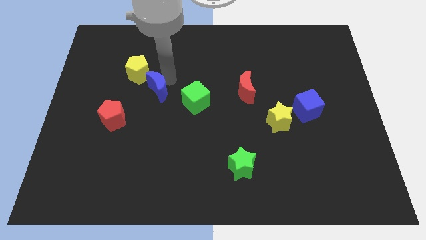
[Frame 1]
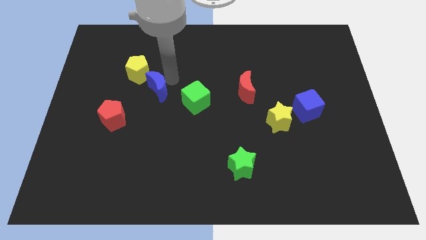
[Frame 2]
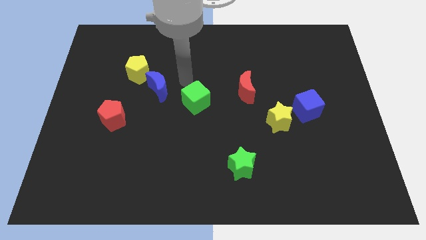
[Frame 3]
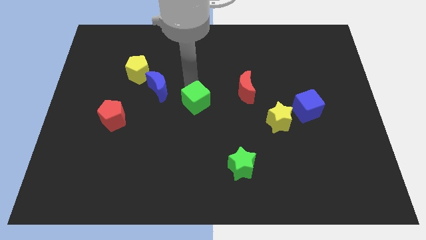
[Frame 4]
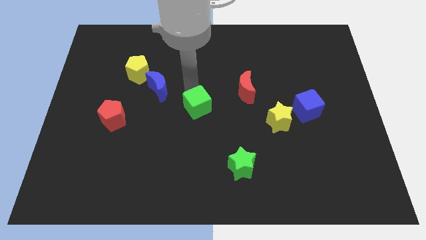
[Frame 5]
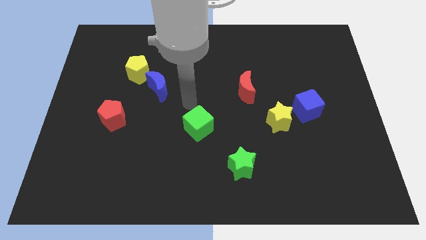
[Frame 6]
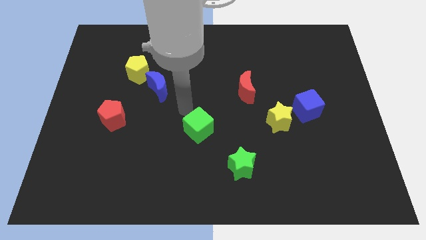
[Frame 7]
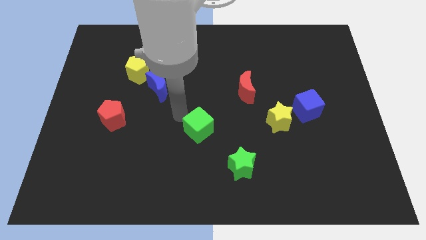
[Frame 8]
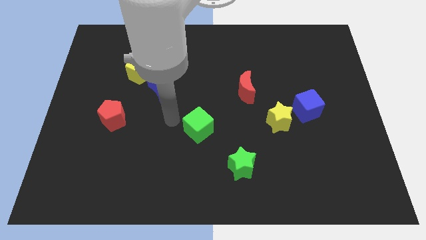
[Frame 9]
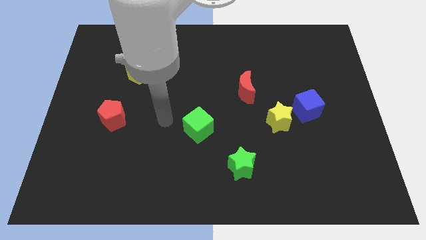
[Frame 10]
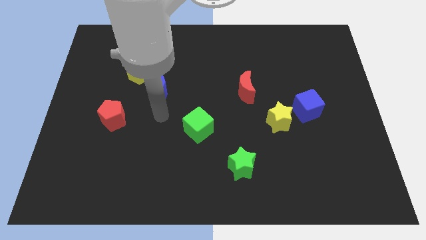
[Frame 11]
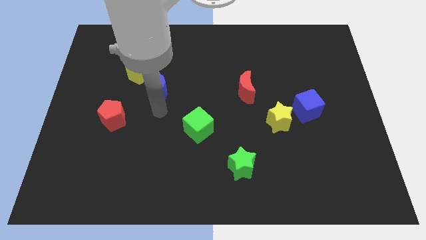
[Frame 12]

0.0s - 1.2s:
place the green cube diagonal to the red crescent

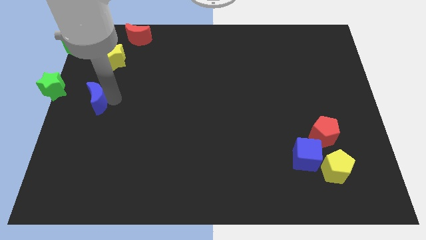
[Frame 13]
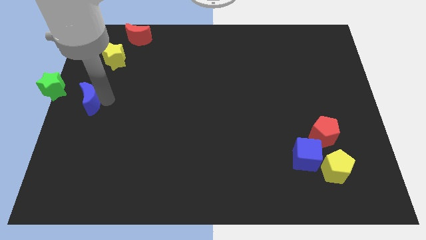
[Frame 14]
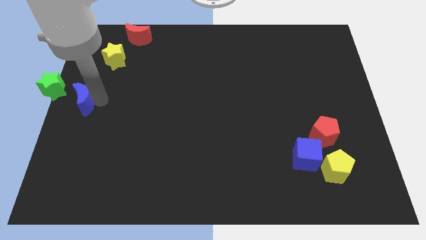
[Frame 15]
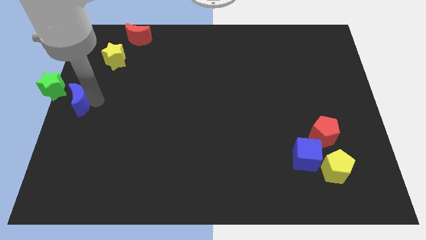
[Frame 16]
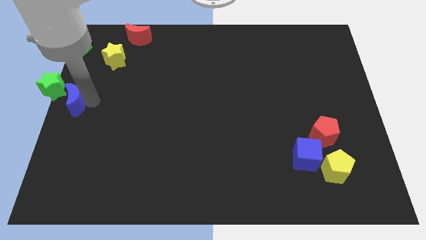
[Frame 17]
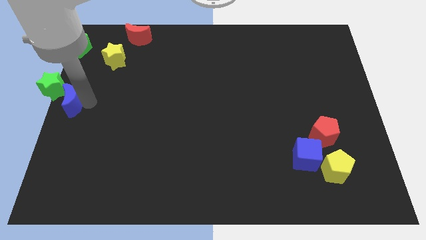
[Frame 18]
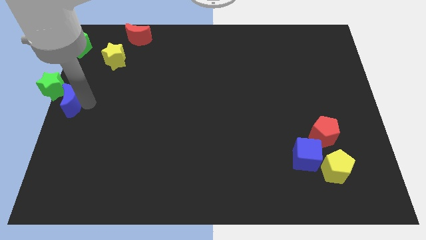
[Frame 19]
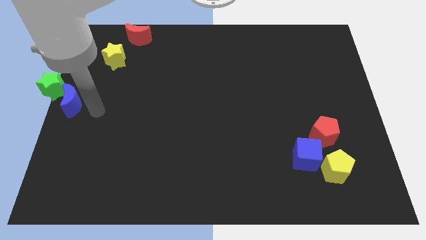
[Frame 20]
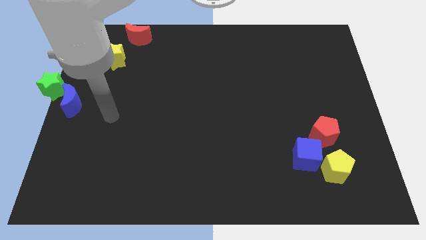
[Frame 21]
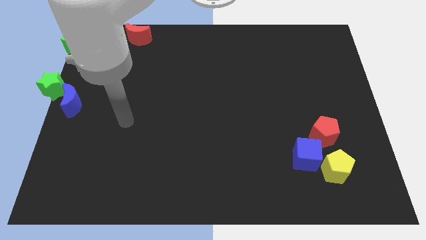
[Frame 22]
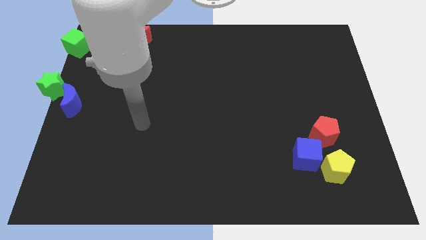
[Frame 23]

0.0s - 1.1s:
push blue moon into green star

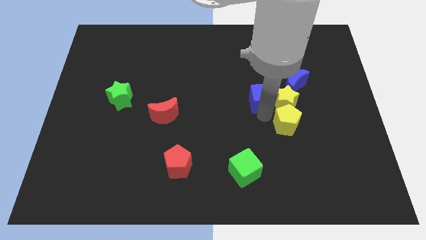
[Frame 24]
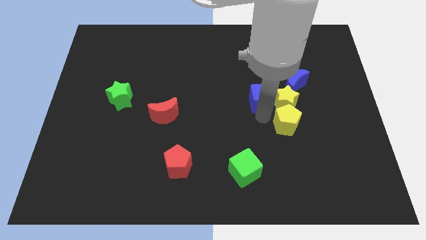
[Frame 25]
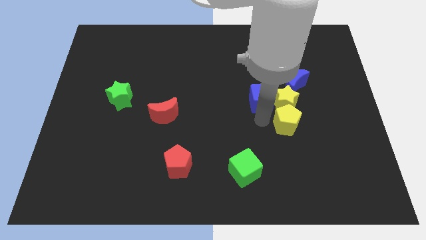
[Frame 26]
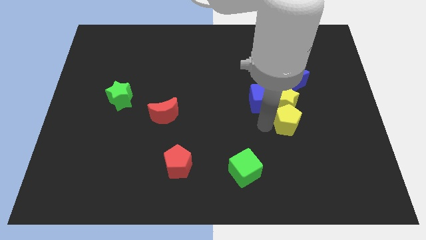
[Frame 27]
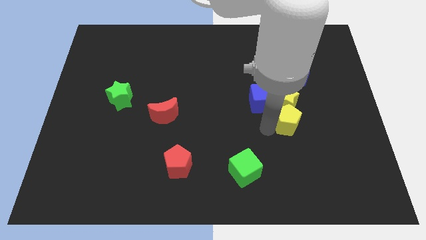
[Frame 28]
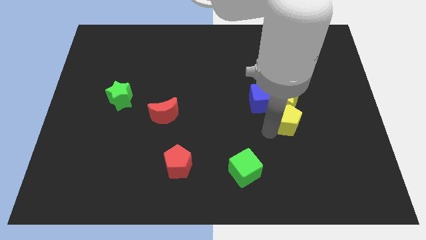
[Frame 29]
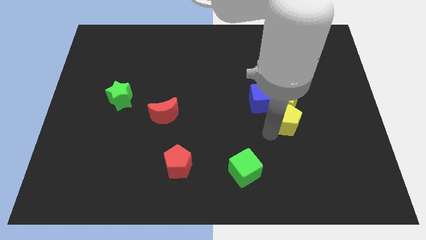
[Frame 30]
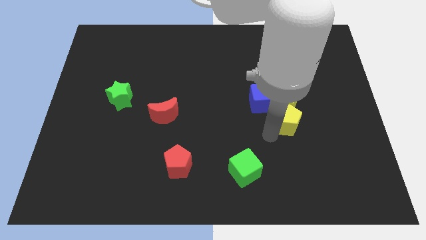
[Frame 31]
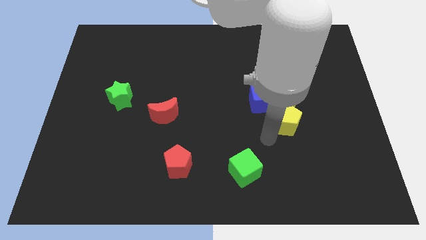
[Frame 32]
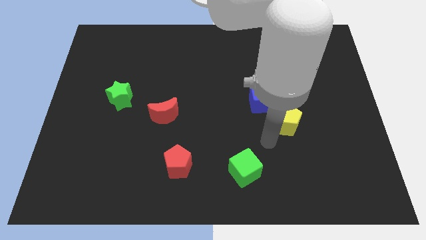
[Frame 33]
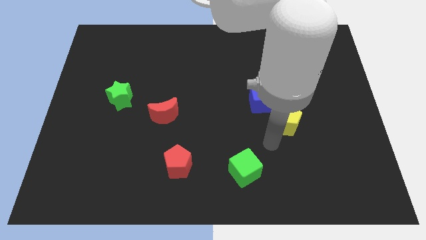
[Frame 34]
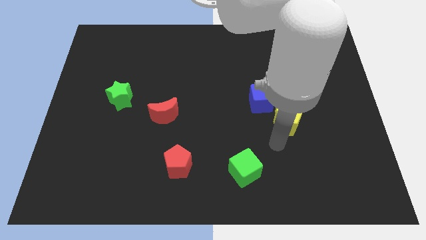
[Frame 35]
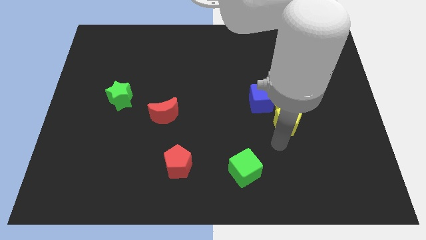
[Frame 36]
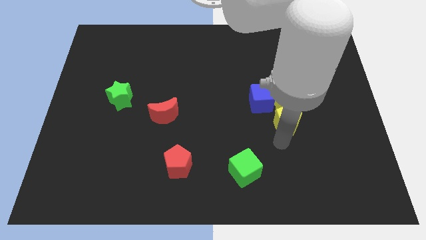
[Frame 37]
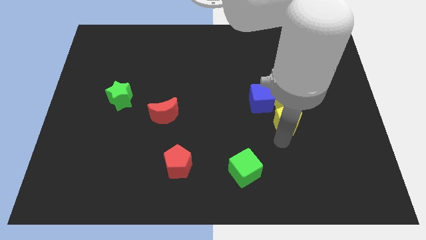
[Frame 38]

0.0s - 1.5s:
move the arm towards the bottom side of the yellow pentagon

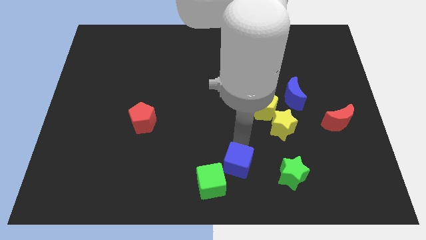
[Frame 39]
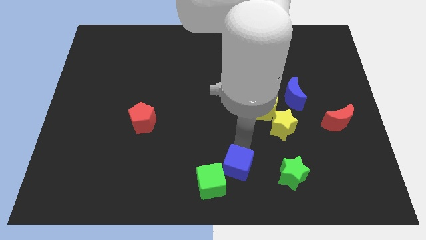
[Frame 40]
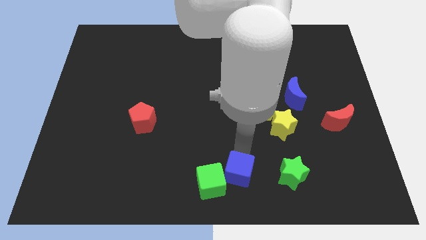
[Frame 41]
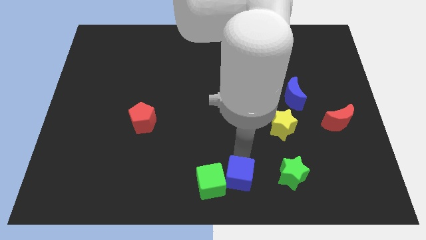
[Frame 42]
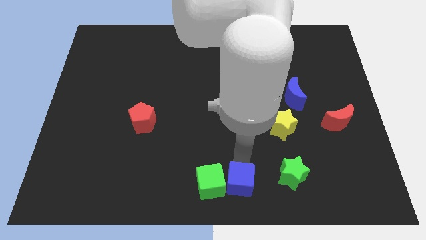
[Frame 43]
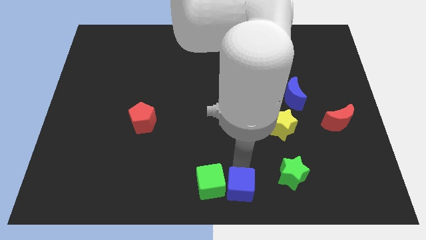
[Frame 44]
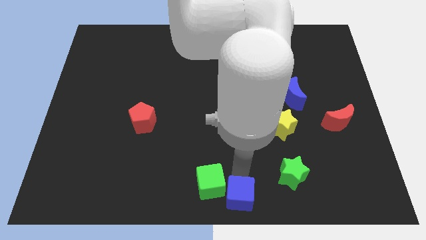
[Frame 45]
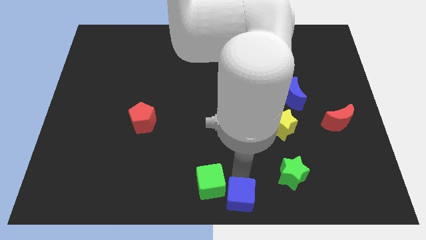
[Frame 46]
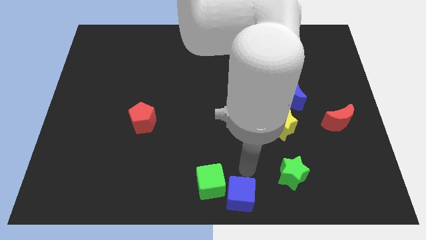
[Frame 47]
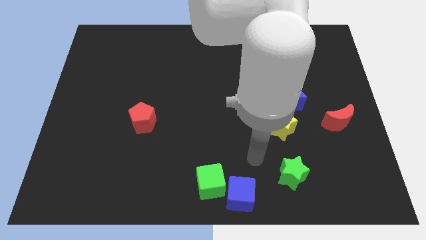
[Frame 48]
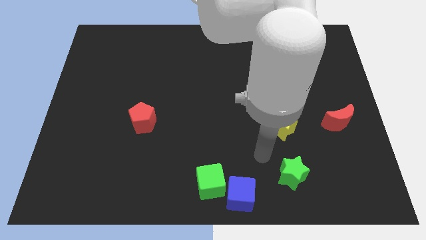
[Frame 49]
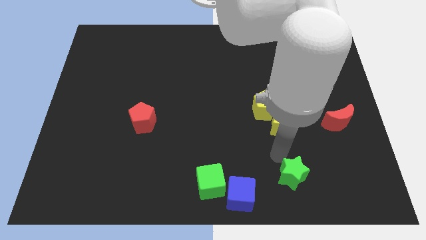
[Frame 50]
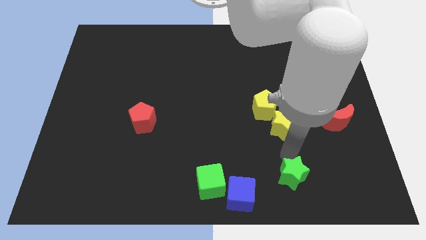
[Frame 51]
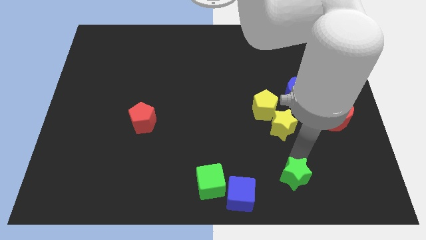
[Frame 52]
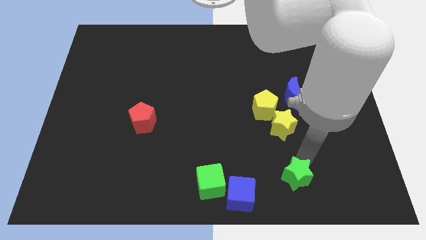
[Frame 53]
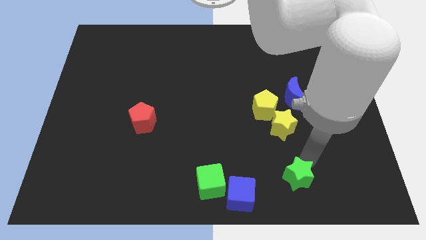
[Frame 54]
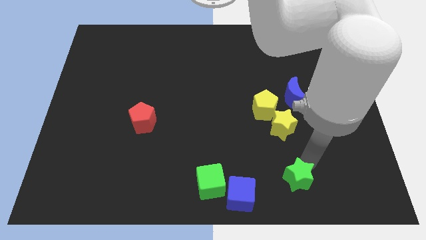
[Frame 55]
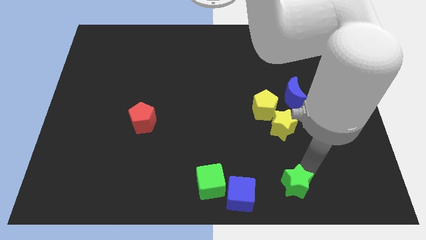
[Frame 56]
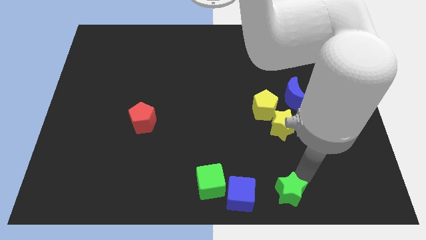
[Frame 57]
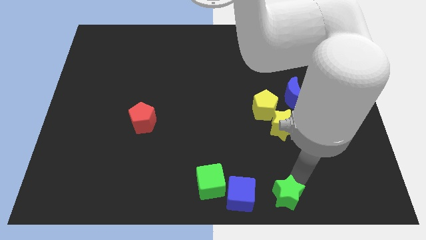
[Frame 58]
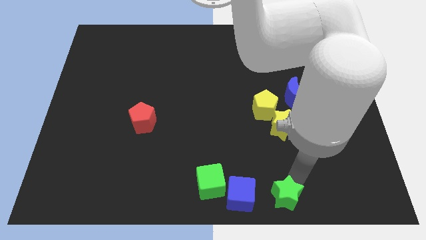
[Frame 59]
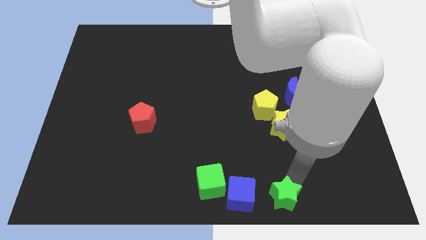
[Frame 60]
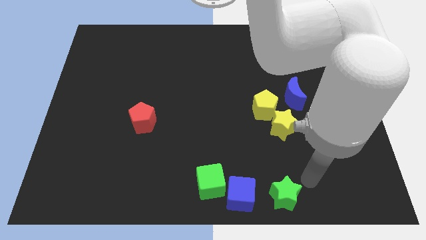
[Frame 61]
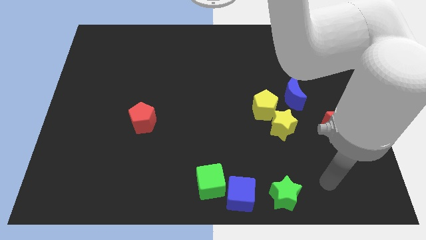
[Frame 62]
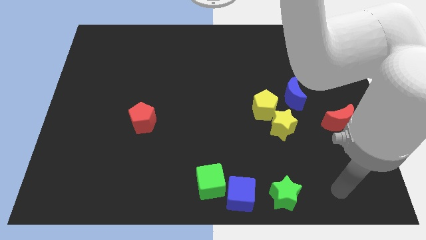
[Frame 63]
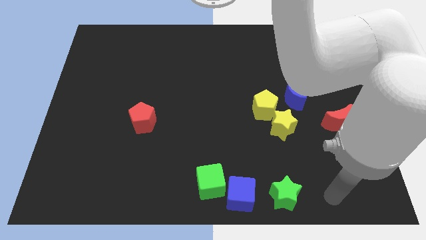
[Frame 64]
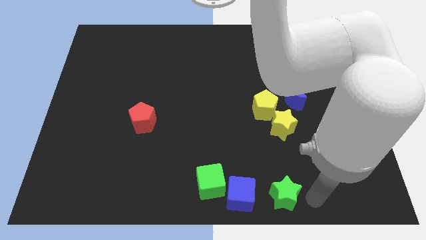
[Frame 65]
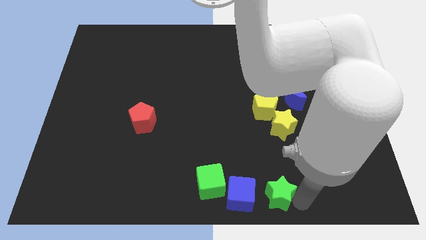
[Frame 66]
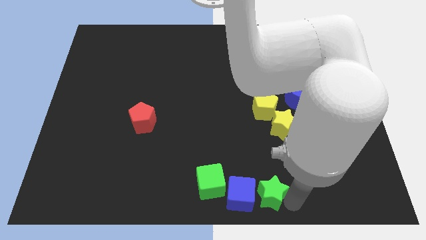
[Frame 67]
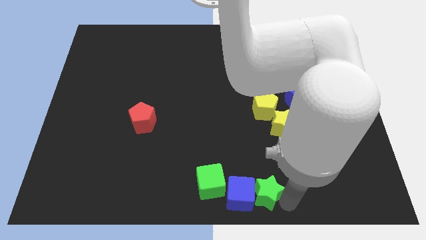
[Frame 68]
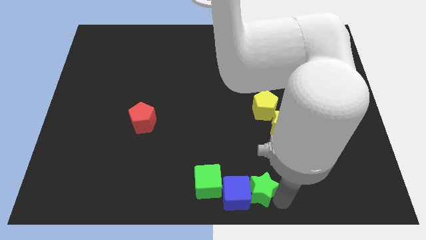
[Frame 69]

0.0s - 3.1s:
move the green star to the right side of the blue cube

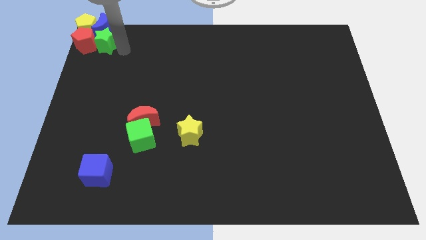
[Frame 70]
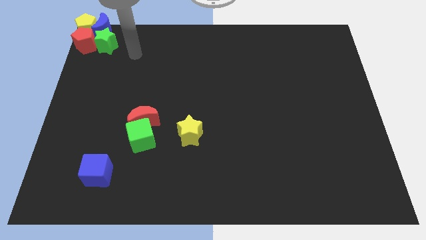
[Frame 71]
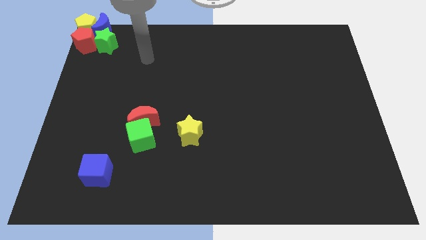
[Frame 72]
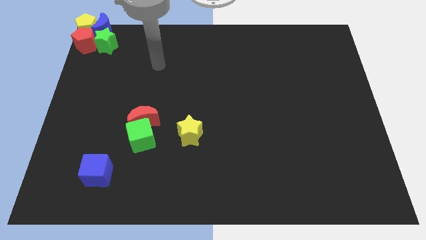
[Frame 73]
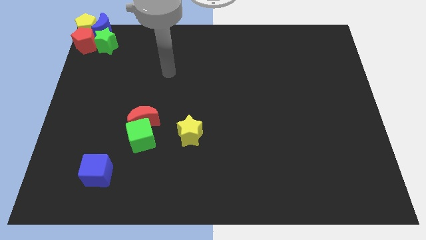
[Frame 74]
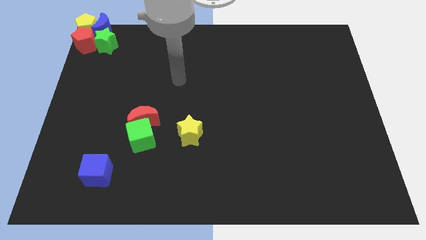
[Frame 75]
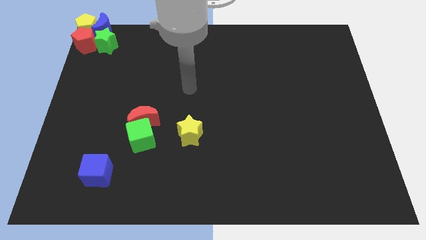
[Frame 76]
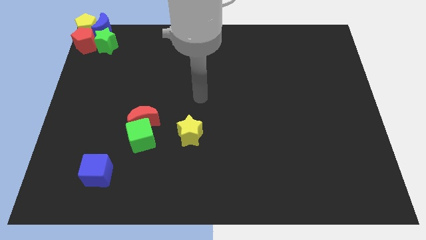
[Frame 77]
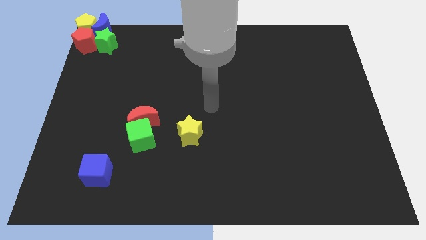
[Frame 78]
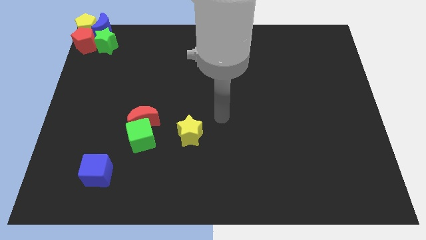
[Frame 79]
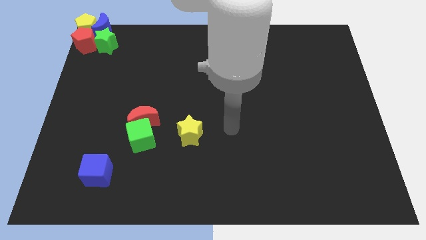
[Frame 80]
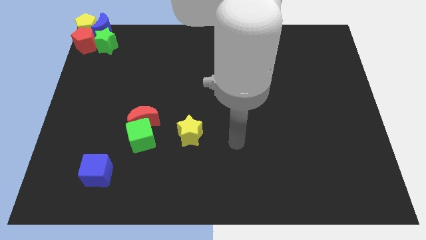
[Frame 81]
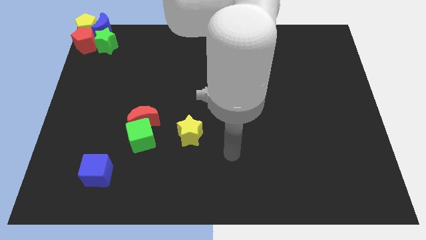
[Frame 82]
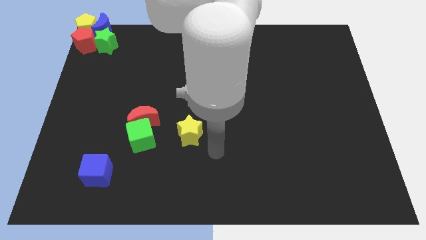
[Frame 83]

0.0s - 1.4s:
place your arm at the bottom right side of yellow star

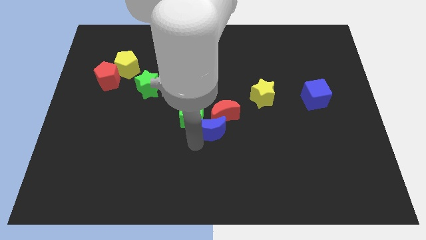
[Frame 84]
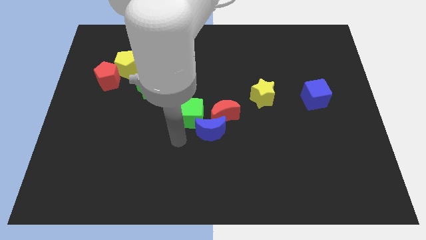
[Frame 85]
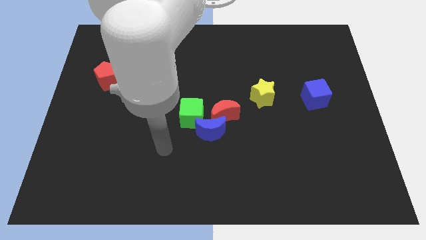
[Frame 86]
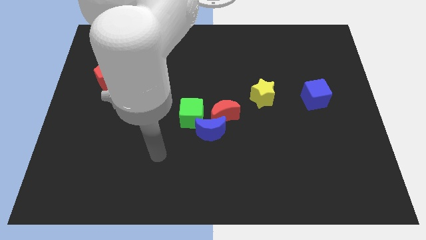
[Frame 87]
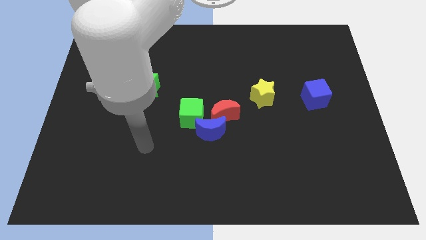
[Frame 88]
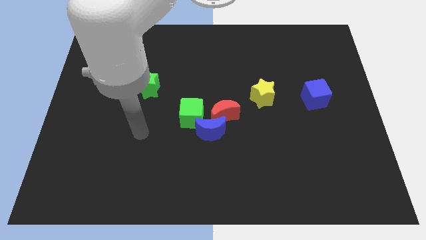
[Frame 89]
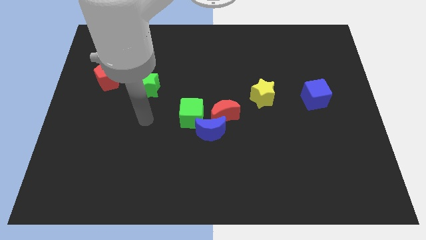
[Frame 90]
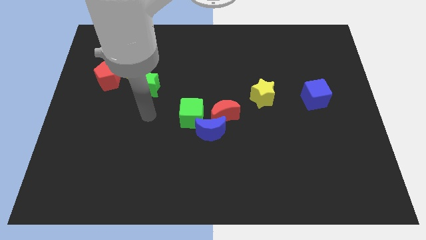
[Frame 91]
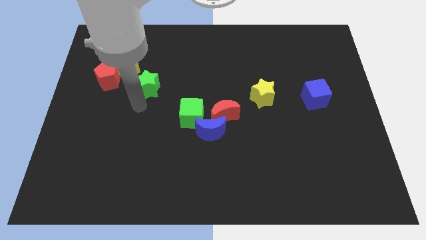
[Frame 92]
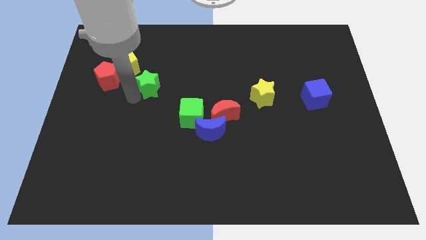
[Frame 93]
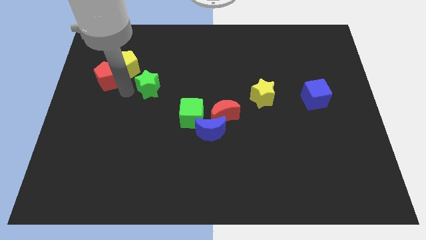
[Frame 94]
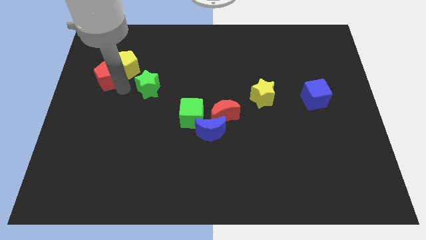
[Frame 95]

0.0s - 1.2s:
move the arm away from the blue moon
